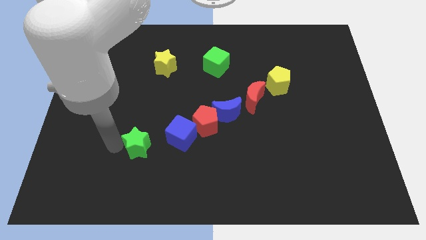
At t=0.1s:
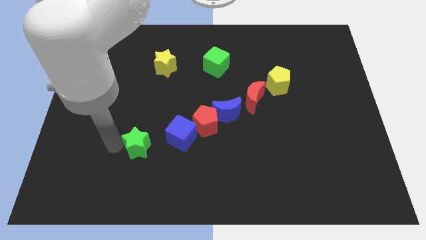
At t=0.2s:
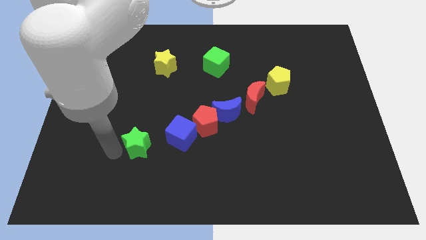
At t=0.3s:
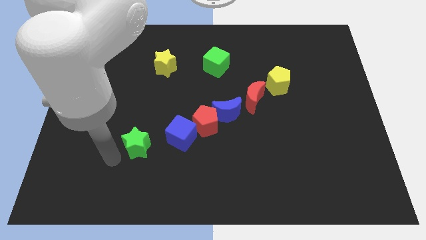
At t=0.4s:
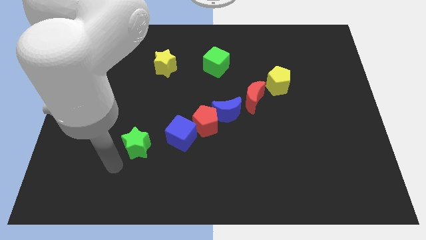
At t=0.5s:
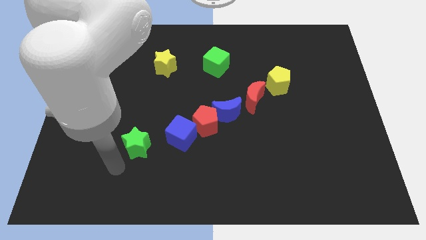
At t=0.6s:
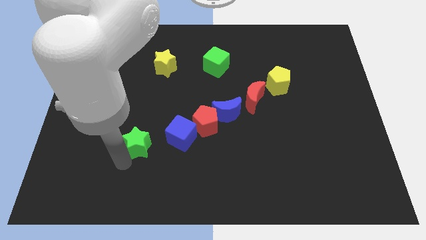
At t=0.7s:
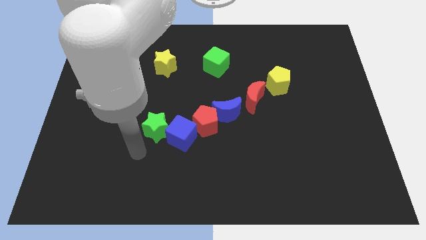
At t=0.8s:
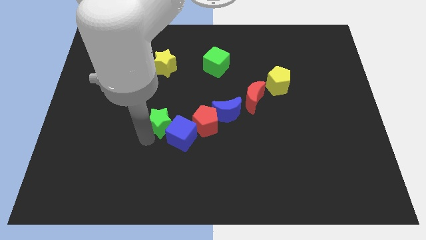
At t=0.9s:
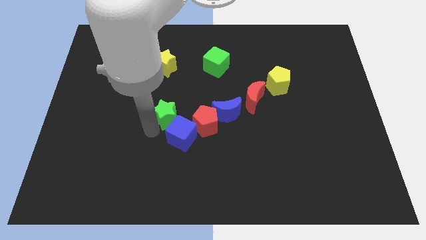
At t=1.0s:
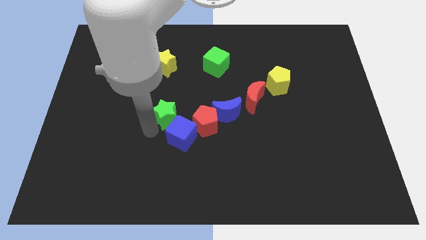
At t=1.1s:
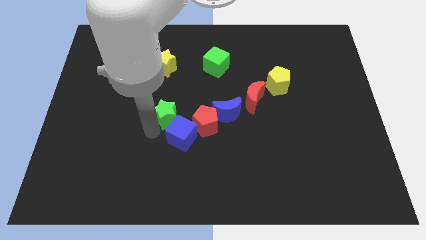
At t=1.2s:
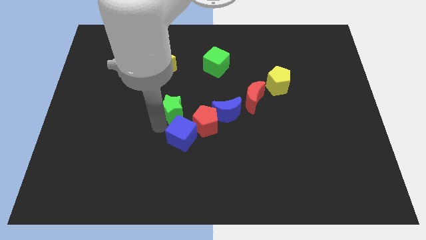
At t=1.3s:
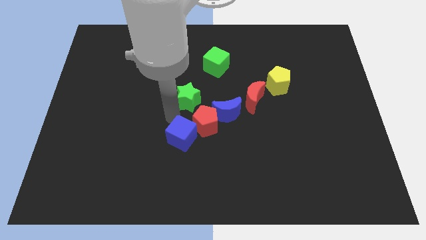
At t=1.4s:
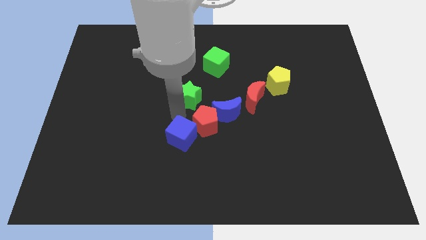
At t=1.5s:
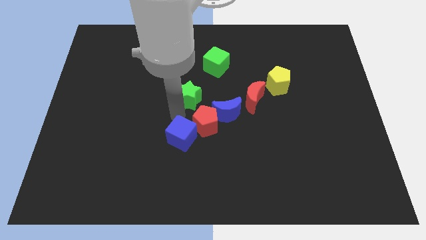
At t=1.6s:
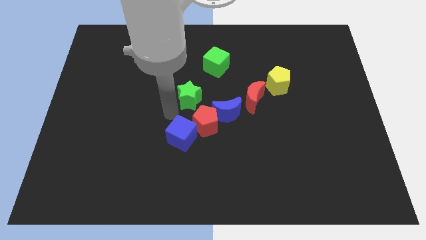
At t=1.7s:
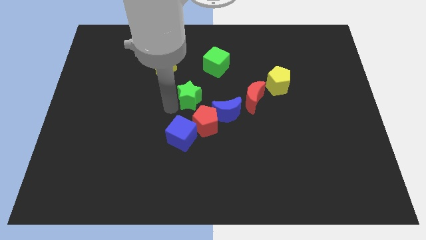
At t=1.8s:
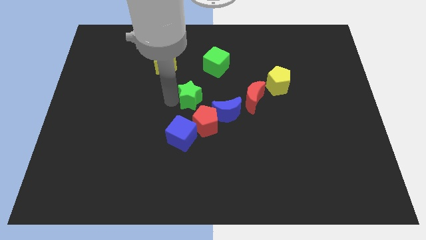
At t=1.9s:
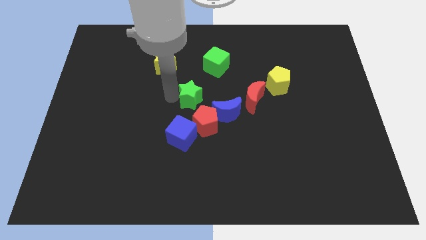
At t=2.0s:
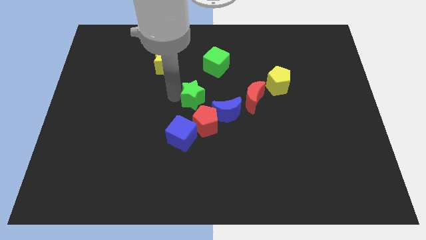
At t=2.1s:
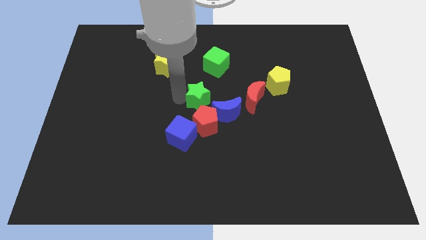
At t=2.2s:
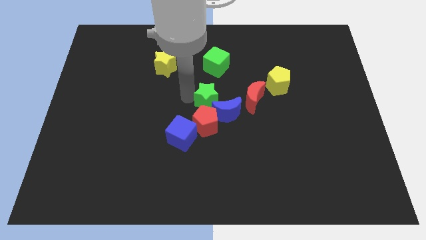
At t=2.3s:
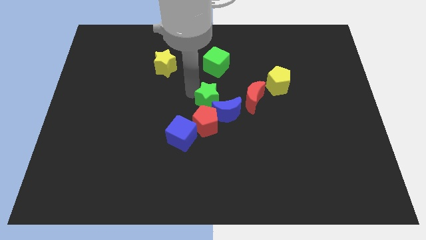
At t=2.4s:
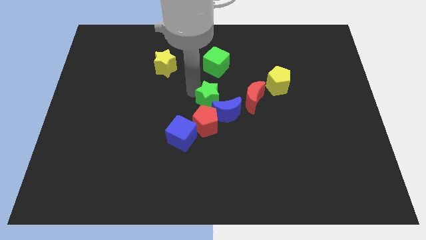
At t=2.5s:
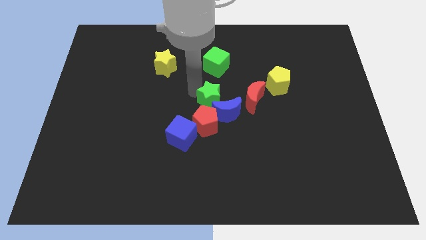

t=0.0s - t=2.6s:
place the green star in between the green cube and red pentagon

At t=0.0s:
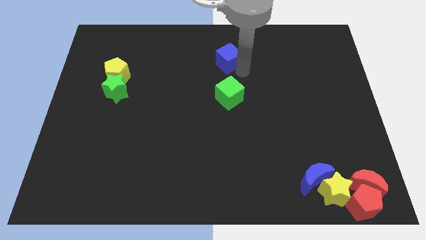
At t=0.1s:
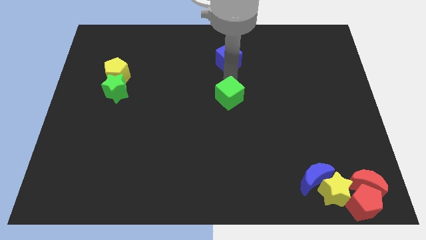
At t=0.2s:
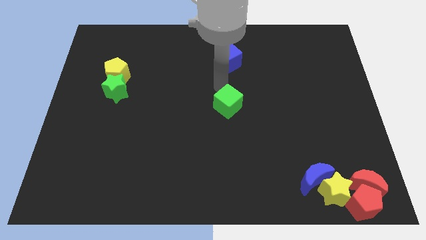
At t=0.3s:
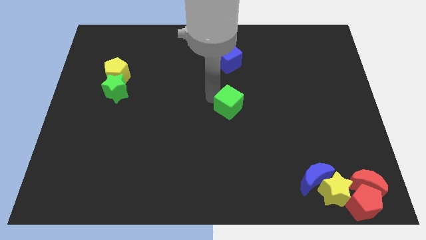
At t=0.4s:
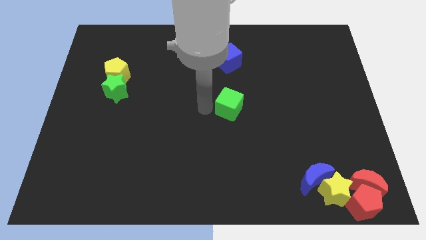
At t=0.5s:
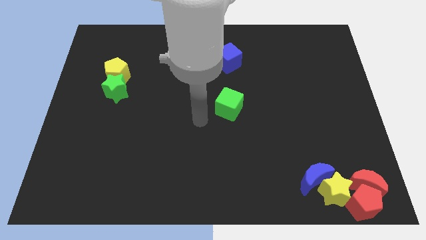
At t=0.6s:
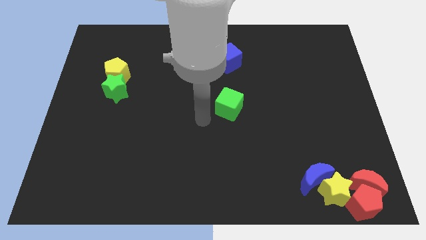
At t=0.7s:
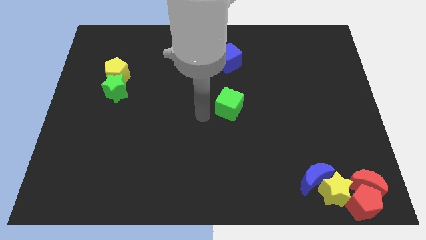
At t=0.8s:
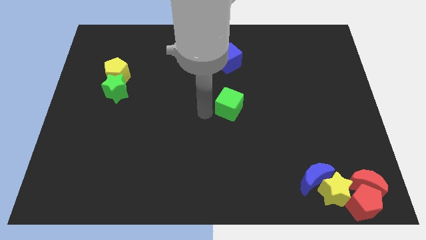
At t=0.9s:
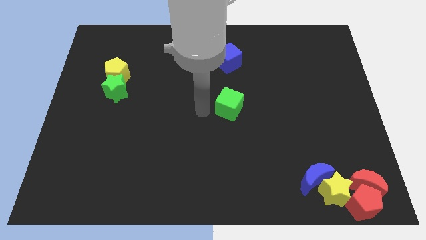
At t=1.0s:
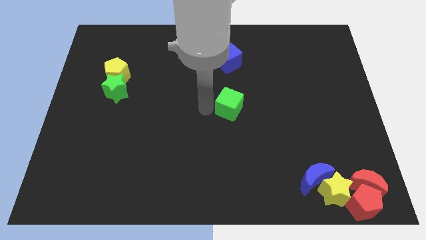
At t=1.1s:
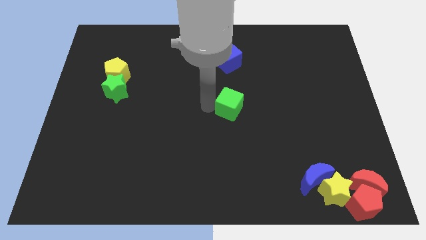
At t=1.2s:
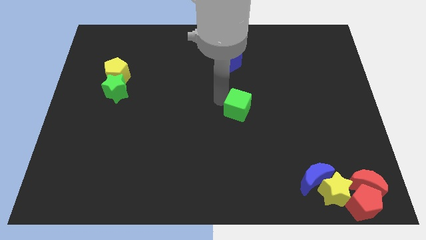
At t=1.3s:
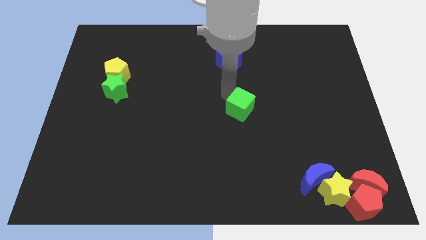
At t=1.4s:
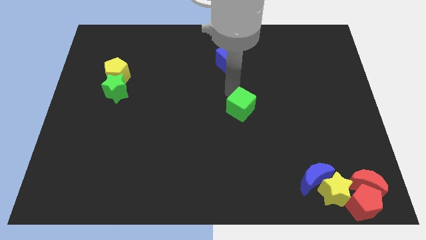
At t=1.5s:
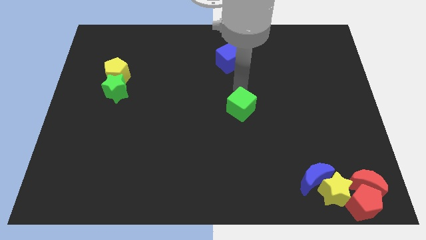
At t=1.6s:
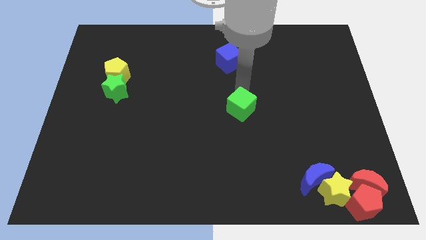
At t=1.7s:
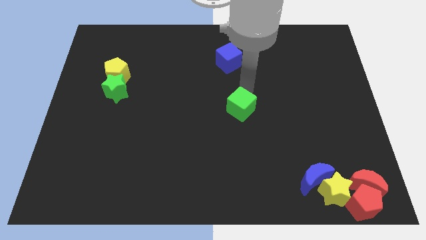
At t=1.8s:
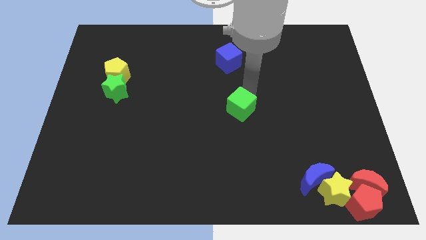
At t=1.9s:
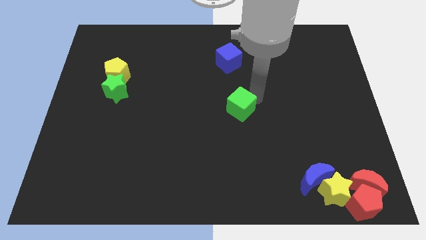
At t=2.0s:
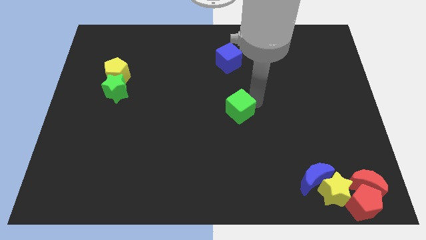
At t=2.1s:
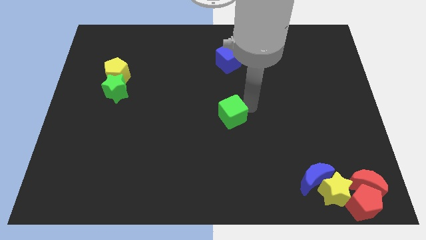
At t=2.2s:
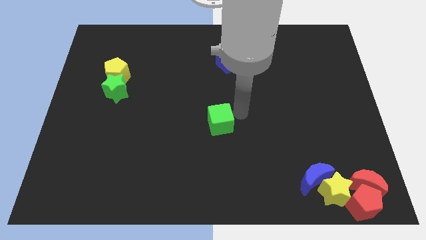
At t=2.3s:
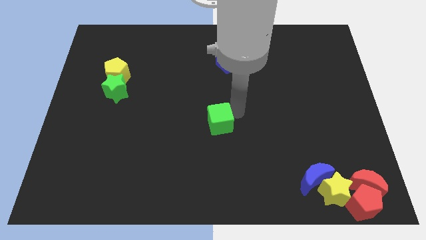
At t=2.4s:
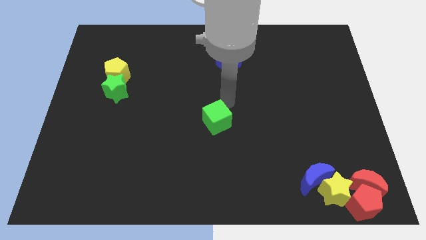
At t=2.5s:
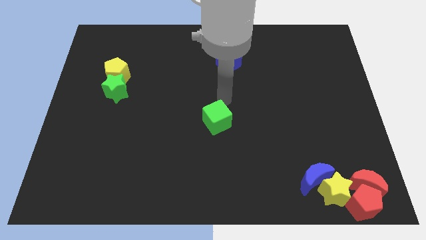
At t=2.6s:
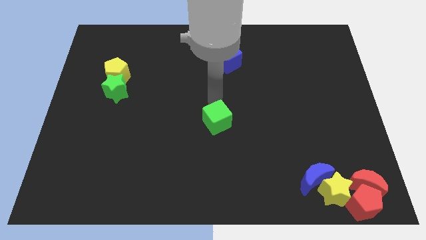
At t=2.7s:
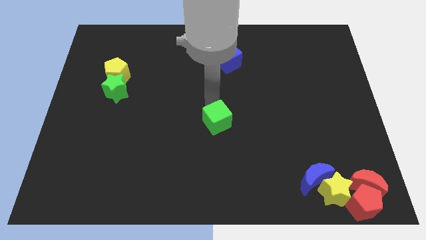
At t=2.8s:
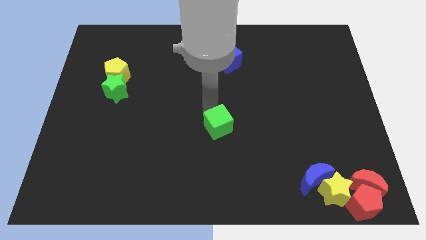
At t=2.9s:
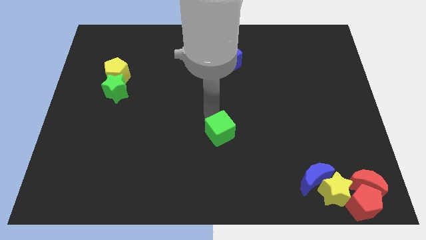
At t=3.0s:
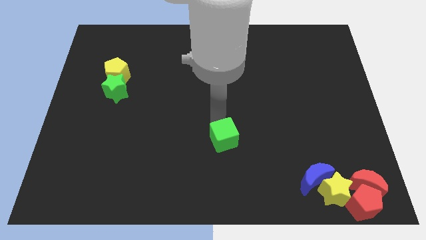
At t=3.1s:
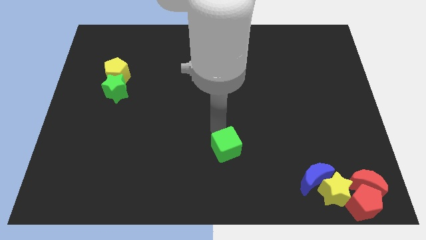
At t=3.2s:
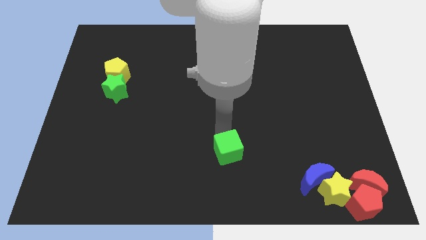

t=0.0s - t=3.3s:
push the green cube towards the bottom side of the board

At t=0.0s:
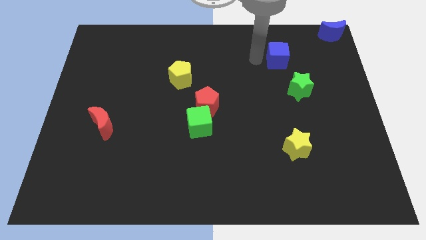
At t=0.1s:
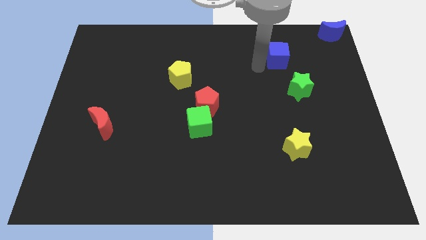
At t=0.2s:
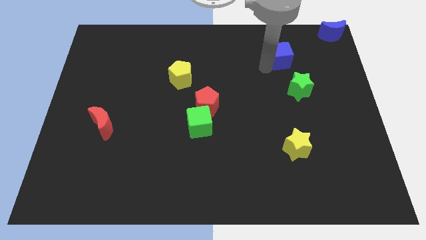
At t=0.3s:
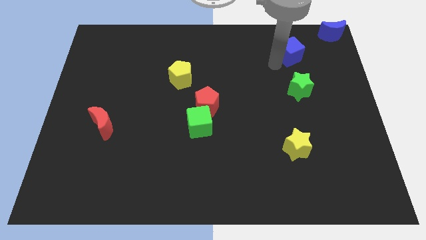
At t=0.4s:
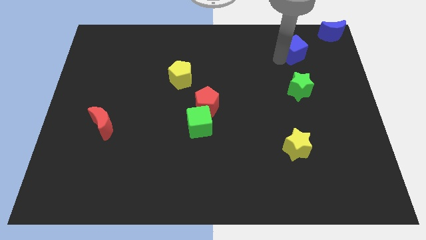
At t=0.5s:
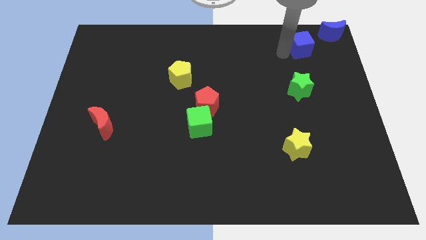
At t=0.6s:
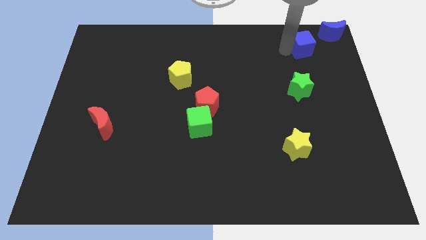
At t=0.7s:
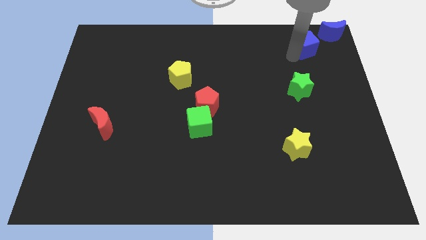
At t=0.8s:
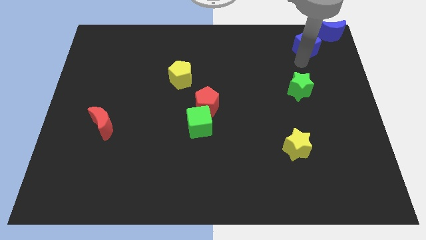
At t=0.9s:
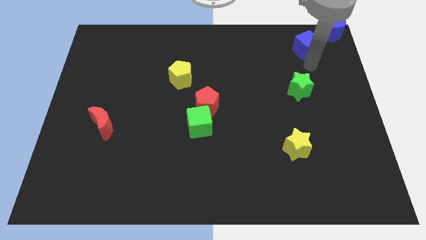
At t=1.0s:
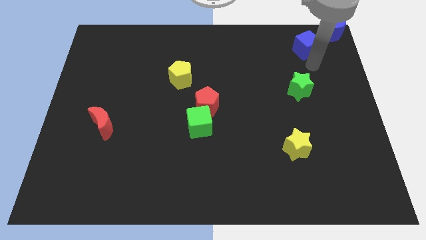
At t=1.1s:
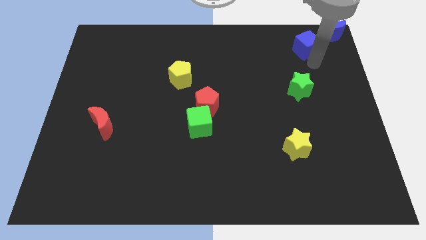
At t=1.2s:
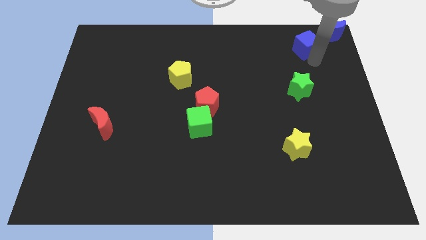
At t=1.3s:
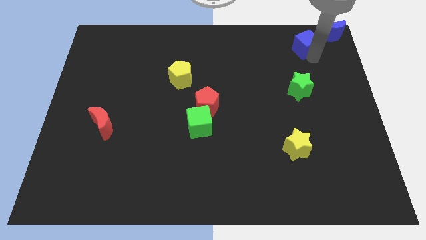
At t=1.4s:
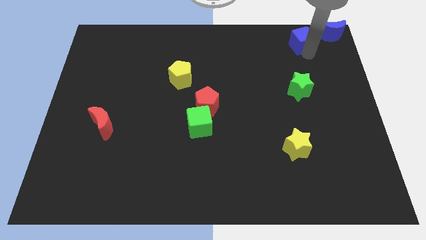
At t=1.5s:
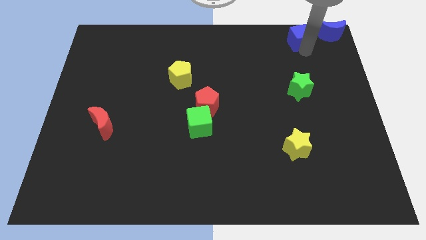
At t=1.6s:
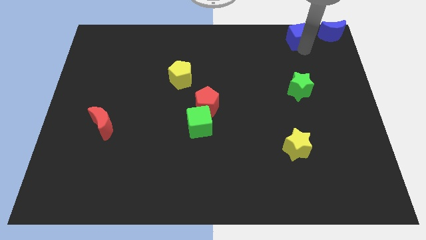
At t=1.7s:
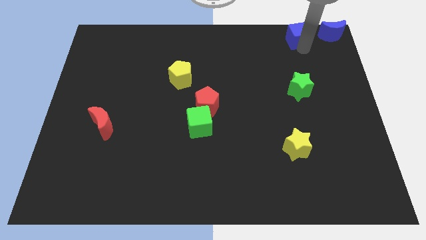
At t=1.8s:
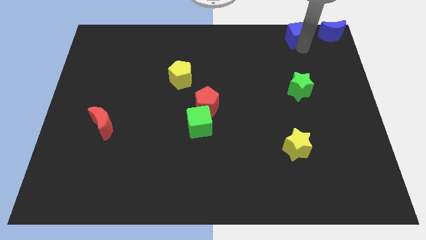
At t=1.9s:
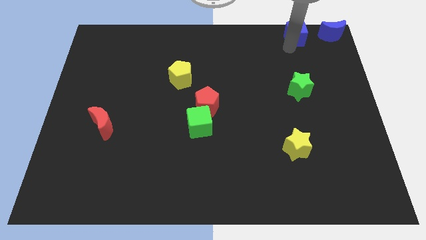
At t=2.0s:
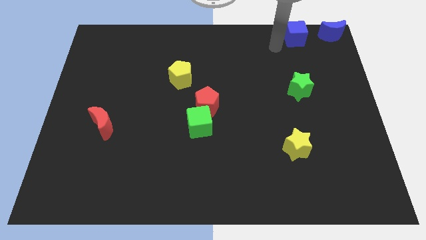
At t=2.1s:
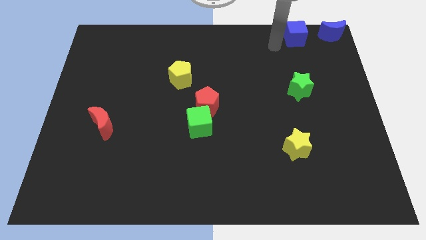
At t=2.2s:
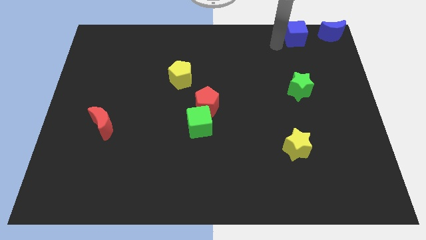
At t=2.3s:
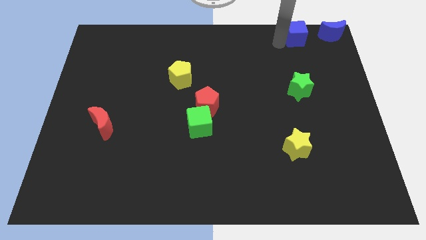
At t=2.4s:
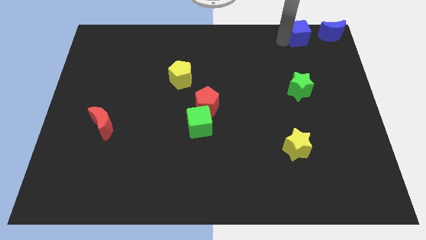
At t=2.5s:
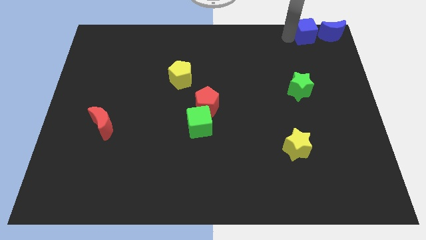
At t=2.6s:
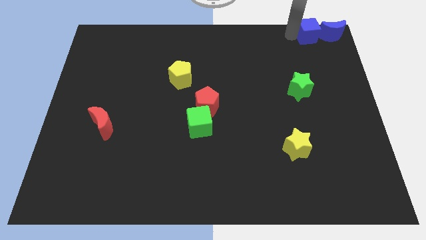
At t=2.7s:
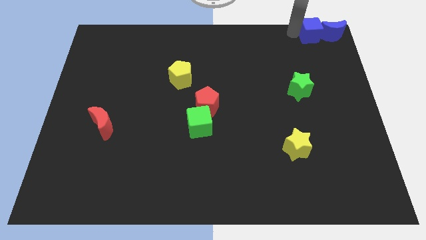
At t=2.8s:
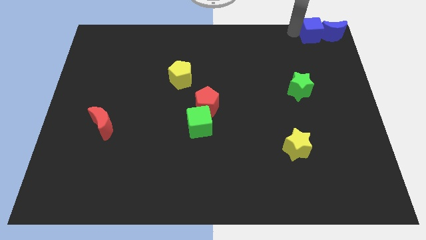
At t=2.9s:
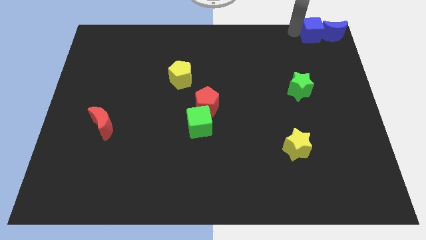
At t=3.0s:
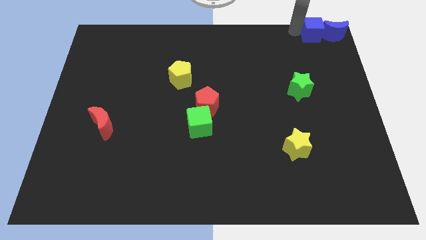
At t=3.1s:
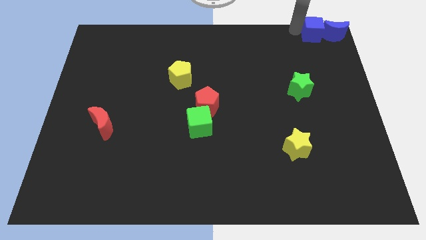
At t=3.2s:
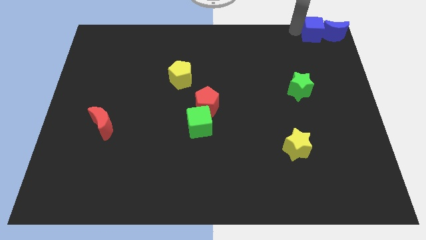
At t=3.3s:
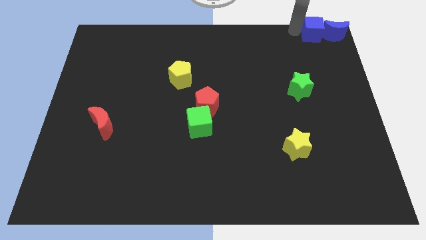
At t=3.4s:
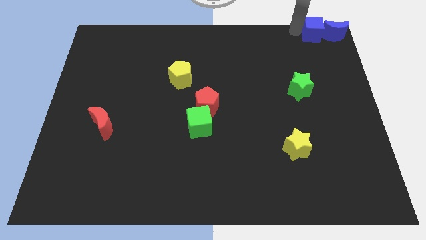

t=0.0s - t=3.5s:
put the blue cube at the left of the blue crescent
